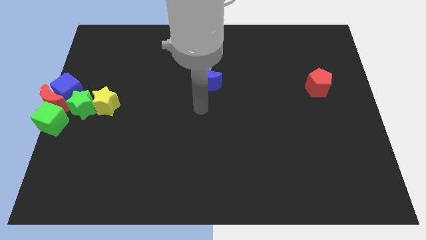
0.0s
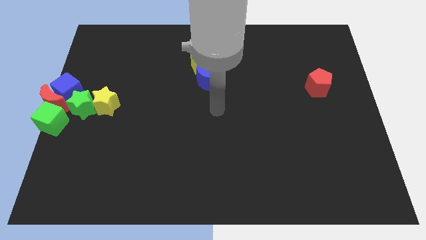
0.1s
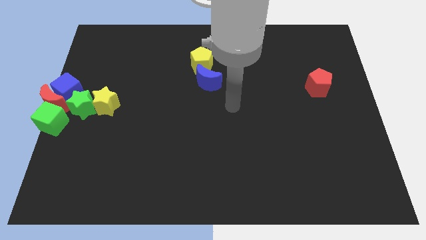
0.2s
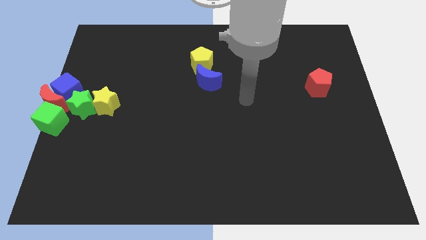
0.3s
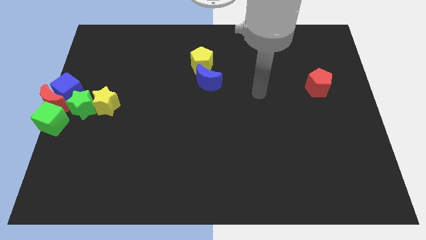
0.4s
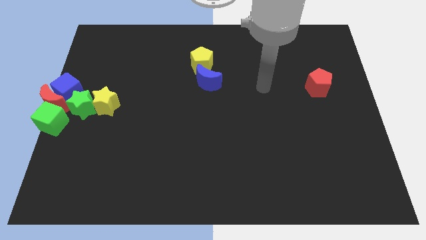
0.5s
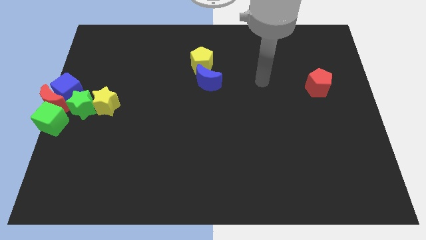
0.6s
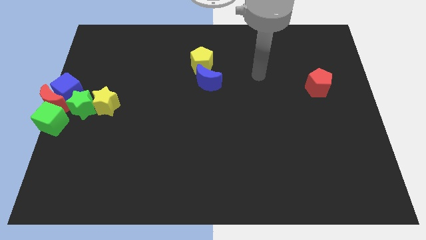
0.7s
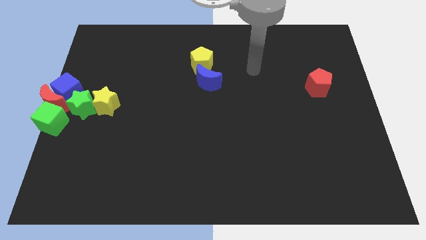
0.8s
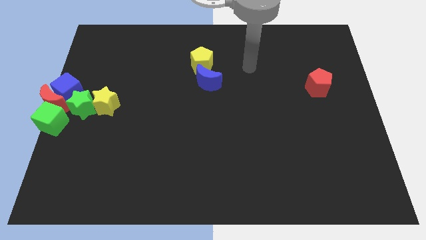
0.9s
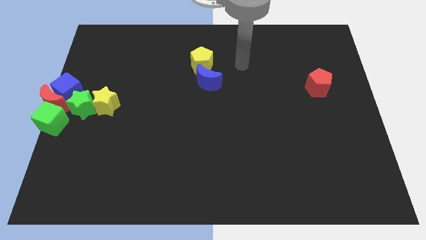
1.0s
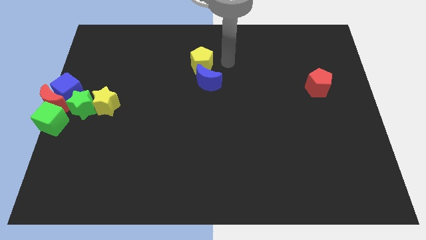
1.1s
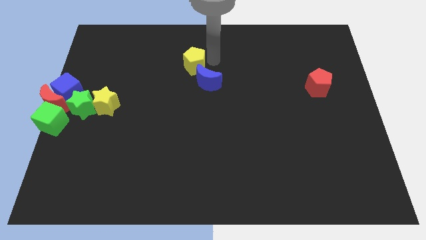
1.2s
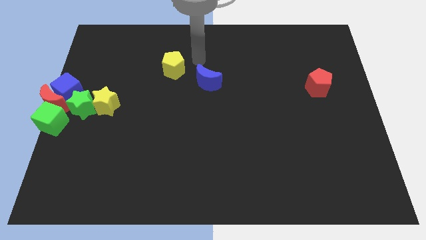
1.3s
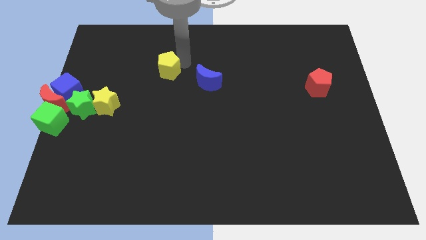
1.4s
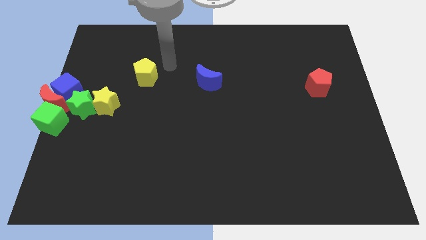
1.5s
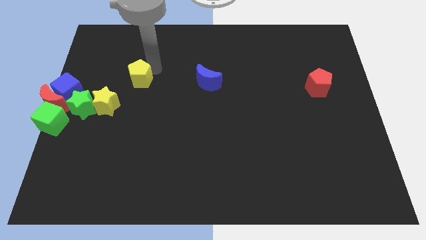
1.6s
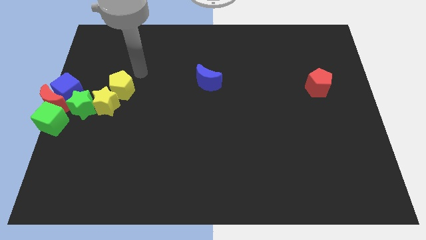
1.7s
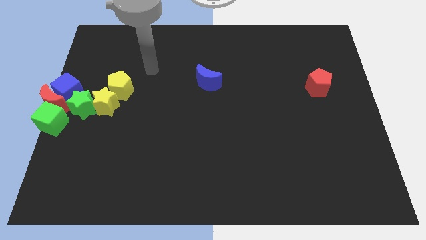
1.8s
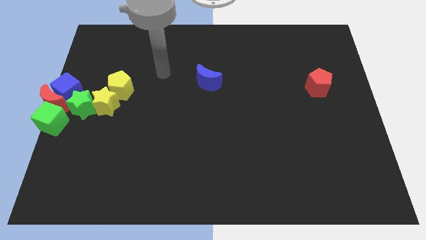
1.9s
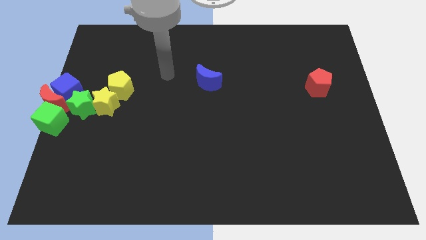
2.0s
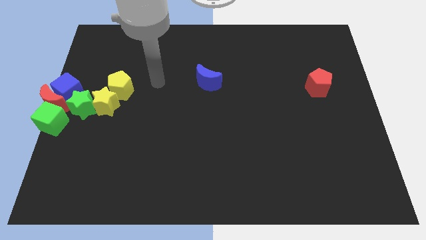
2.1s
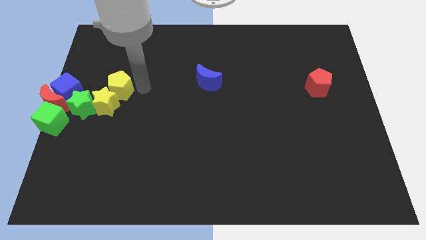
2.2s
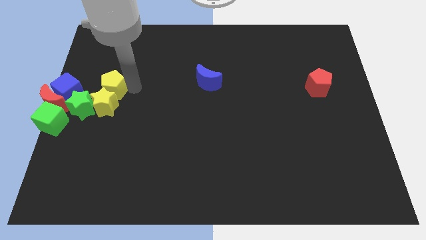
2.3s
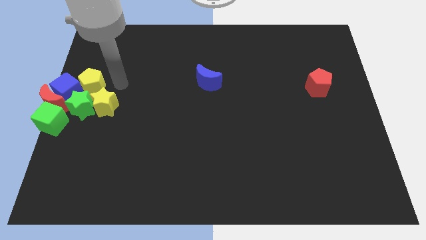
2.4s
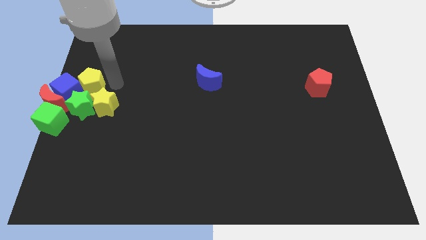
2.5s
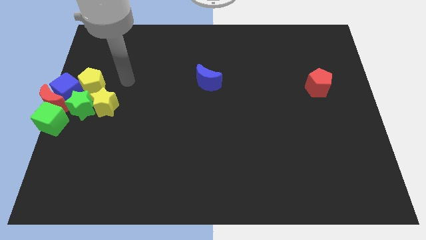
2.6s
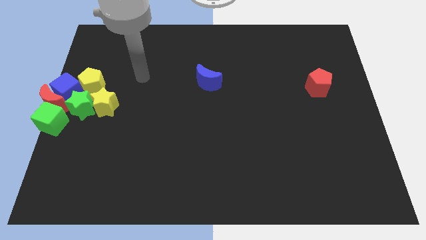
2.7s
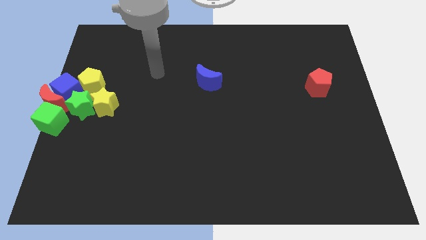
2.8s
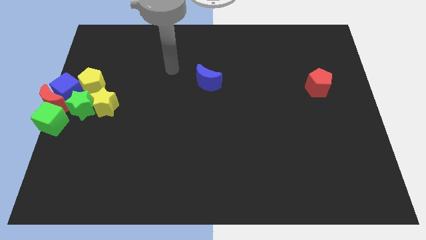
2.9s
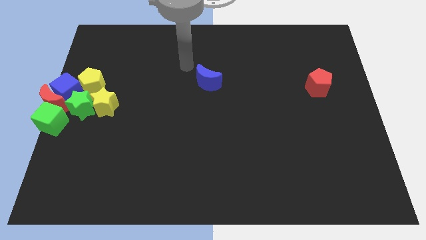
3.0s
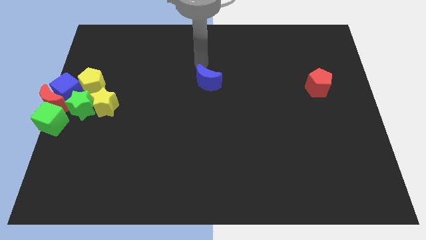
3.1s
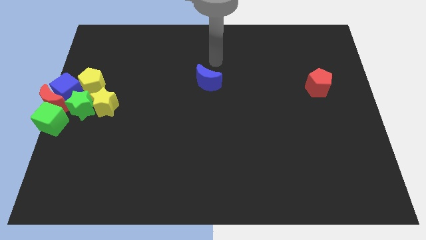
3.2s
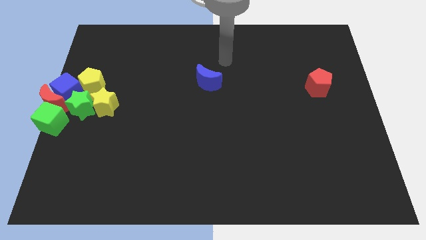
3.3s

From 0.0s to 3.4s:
move the yellow pentagon above left to the yellow star

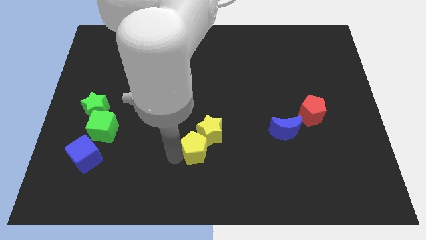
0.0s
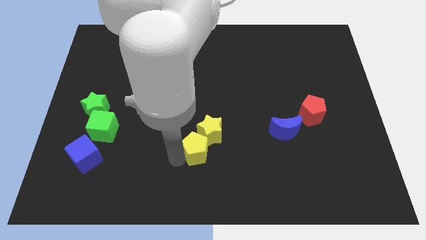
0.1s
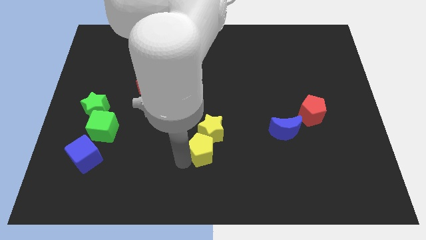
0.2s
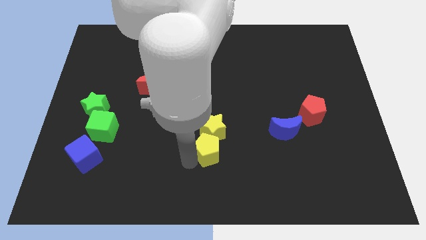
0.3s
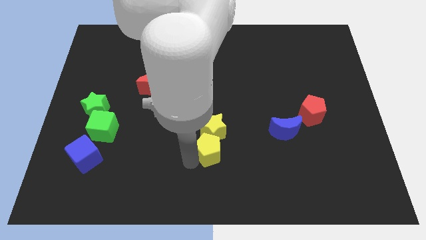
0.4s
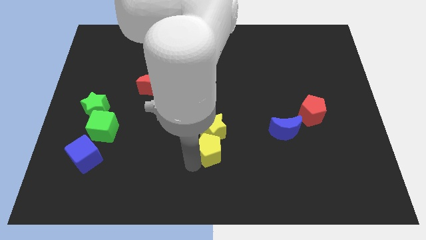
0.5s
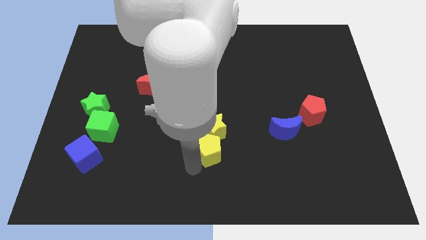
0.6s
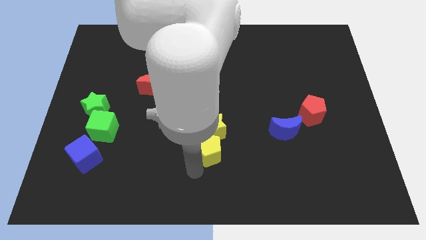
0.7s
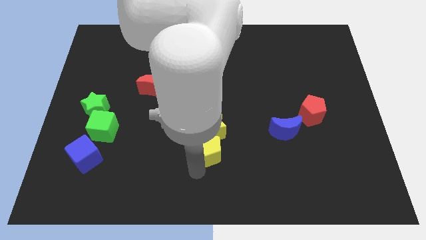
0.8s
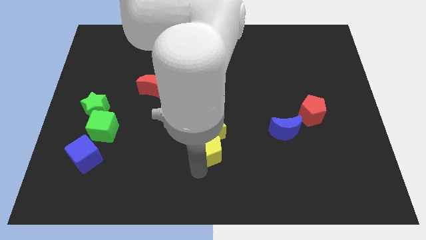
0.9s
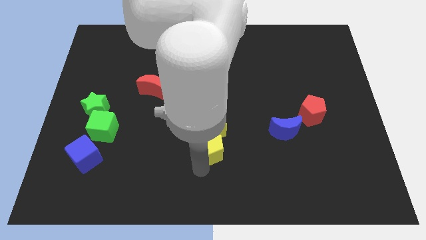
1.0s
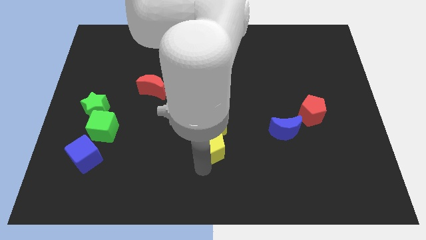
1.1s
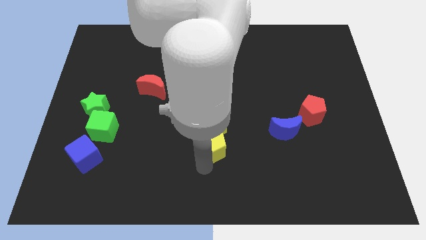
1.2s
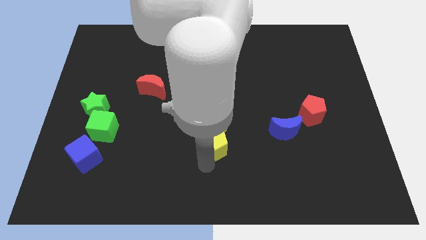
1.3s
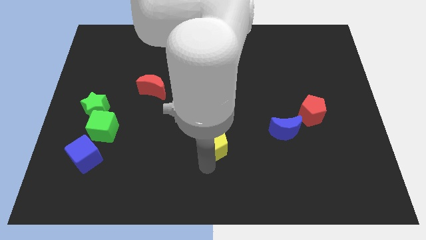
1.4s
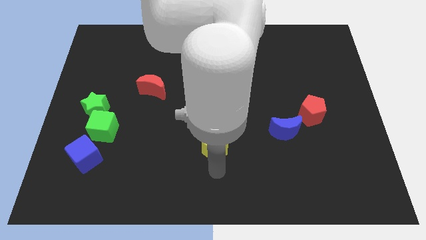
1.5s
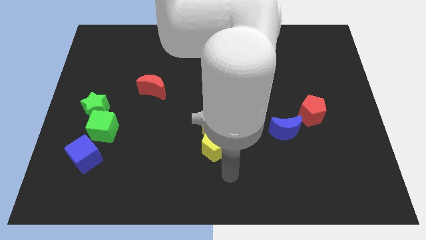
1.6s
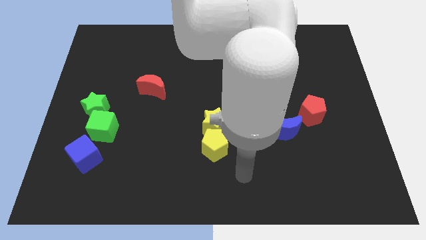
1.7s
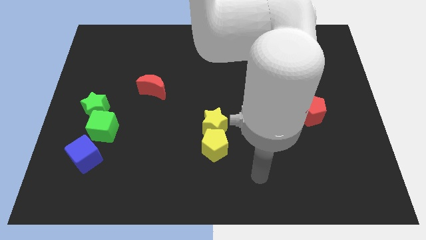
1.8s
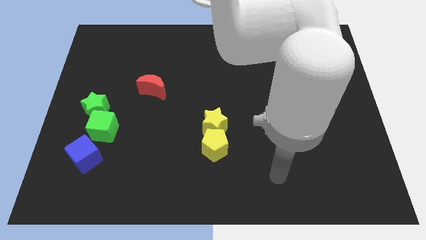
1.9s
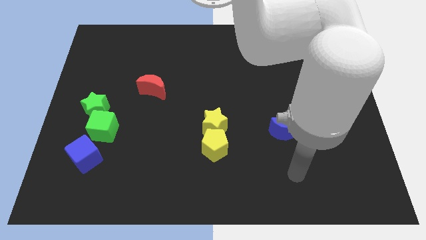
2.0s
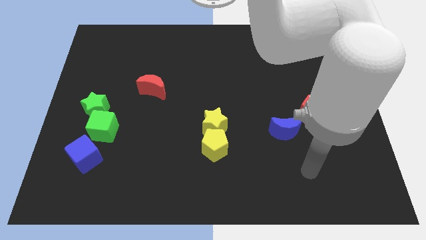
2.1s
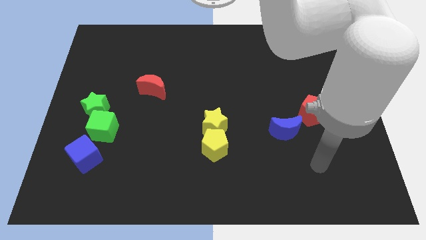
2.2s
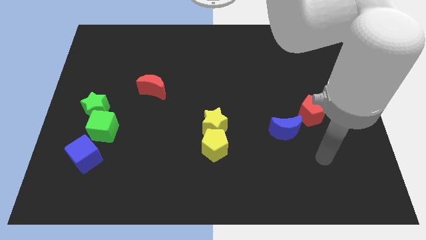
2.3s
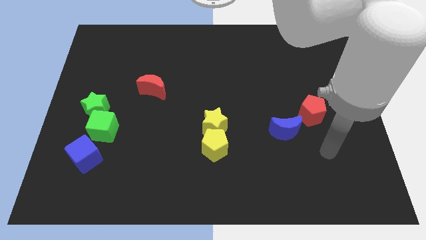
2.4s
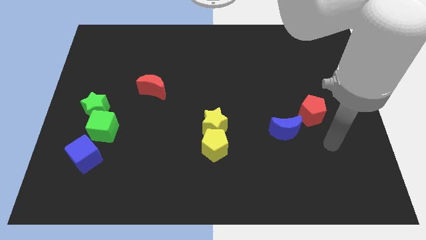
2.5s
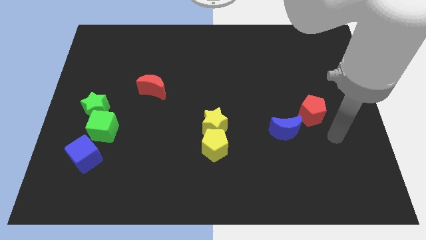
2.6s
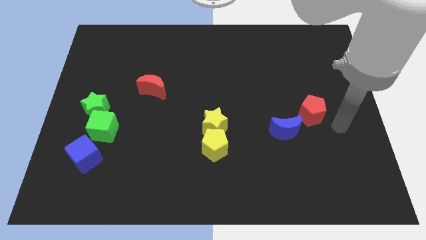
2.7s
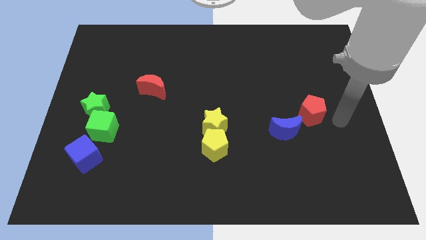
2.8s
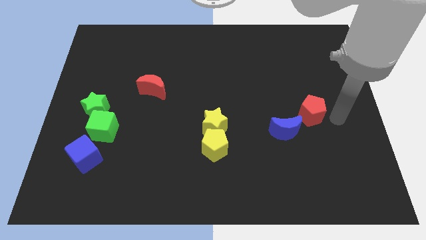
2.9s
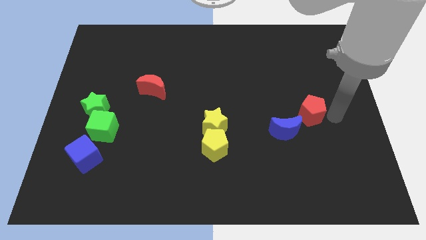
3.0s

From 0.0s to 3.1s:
put the yellow pentagon at the bottom of the yellow star

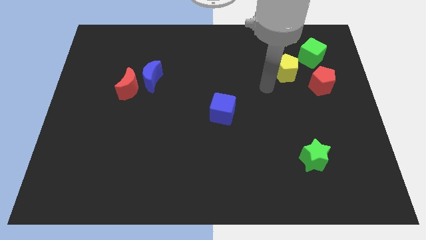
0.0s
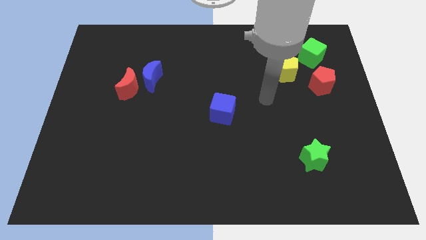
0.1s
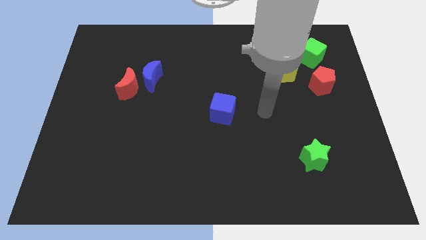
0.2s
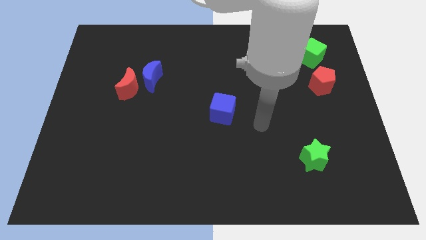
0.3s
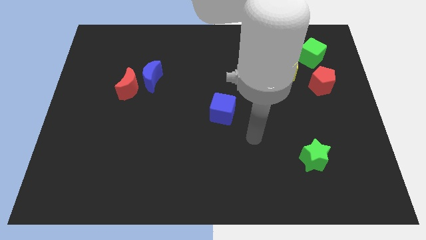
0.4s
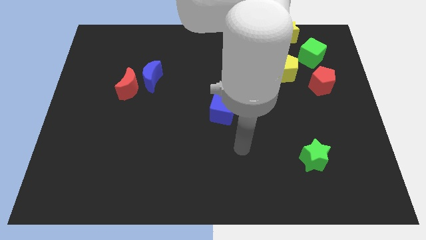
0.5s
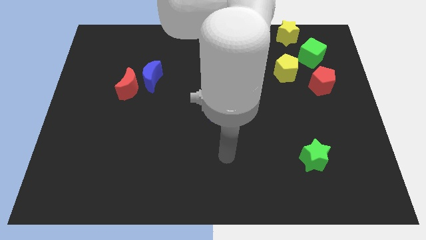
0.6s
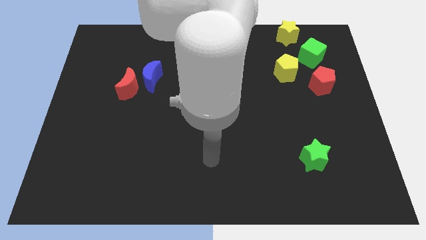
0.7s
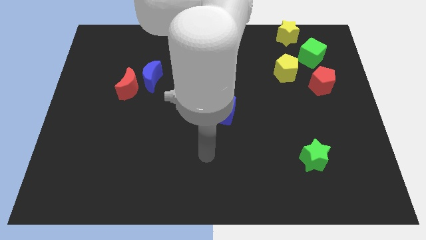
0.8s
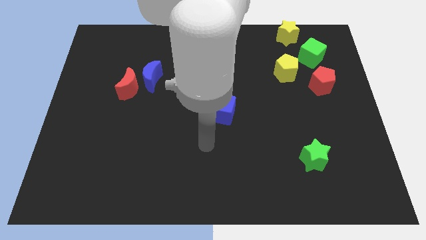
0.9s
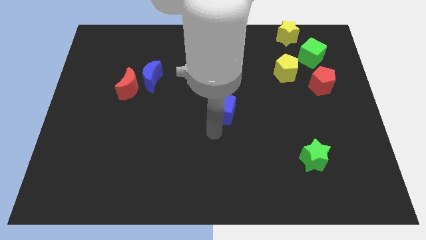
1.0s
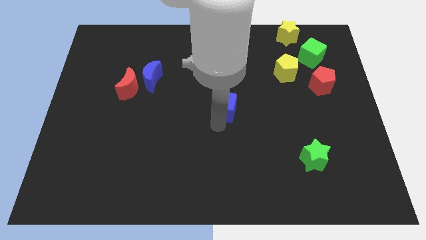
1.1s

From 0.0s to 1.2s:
point your arm at the bottom of the blue cube

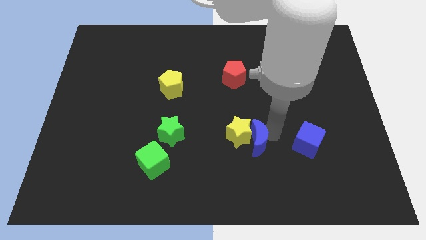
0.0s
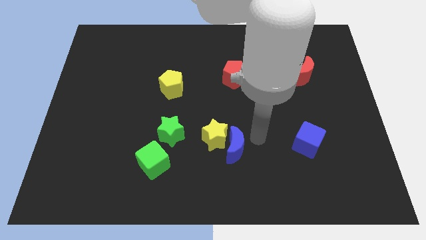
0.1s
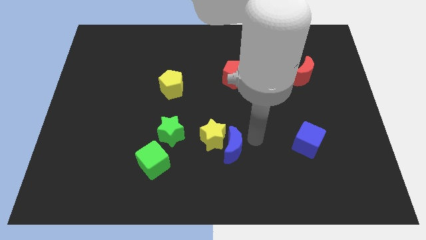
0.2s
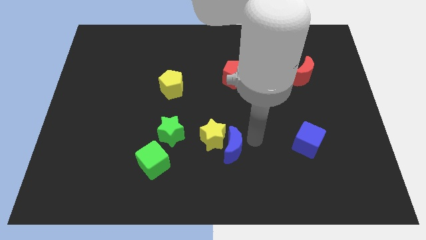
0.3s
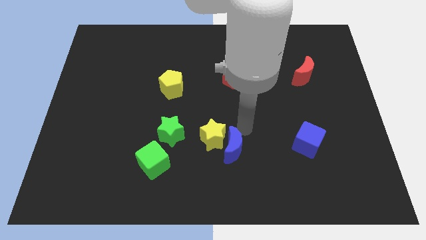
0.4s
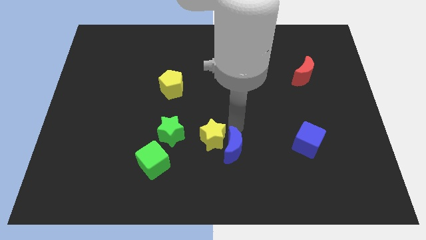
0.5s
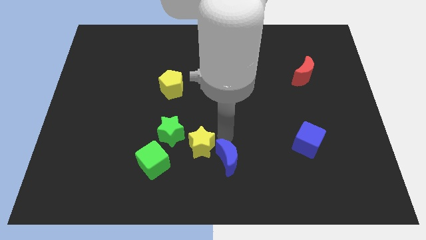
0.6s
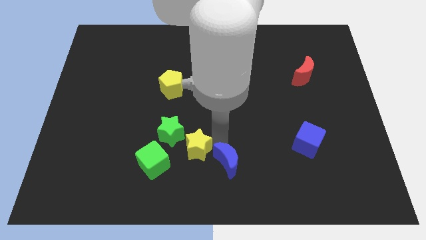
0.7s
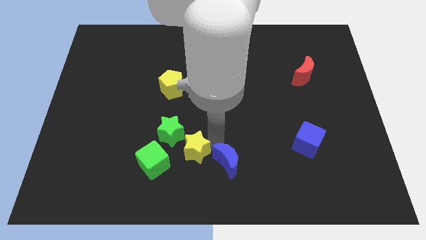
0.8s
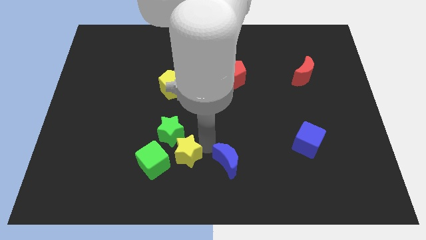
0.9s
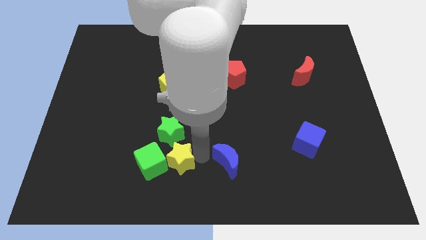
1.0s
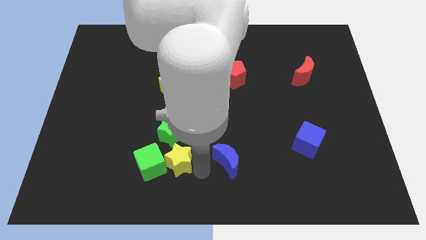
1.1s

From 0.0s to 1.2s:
separate yellow star from the blue moon

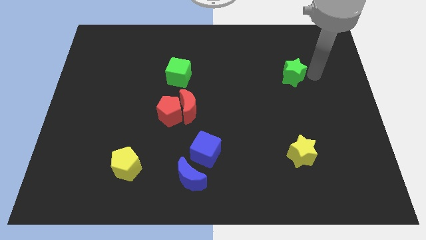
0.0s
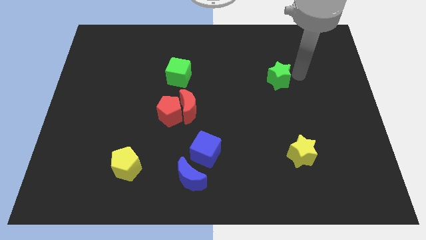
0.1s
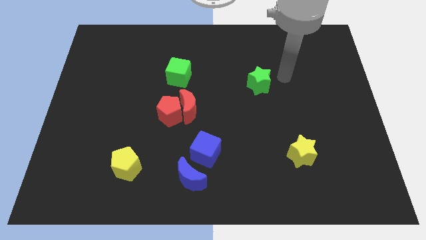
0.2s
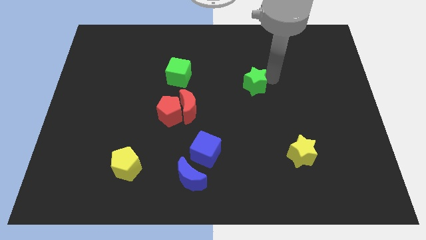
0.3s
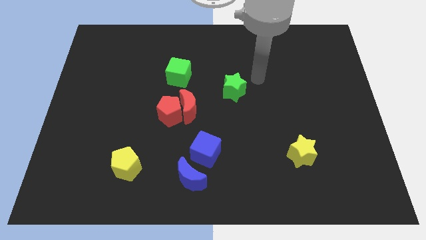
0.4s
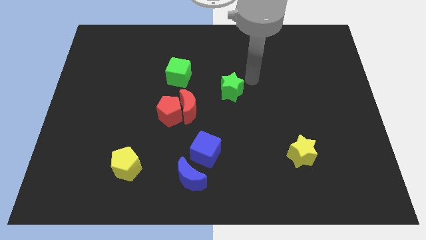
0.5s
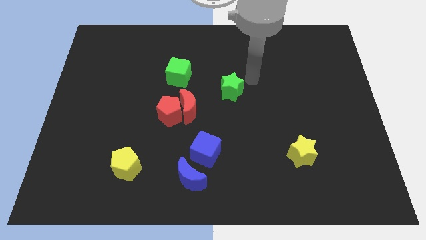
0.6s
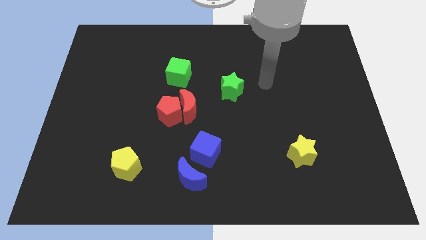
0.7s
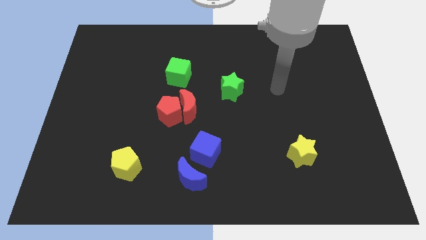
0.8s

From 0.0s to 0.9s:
move the green star diagonal to the yellow star
